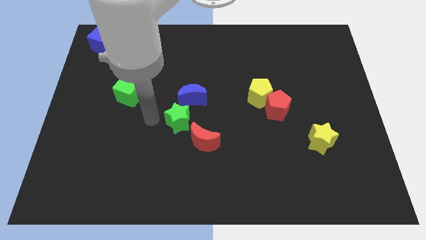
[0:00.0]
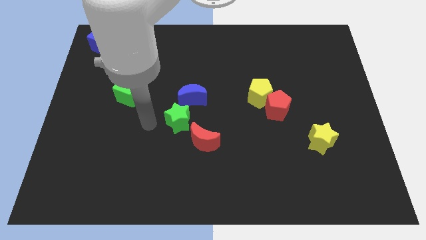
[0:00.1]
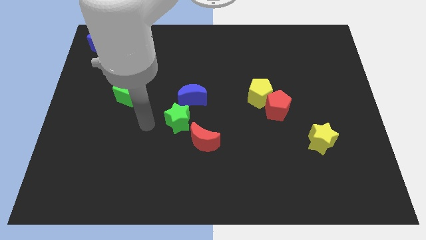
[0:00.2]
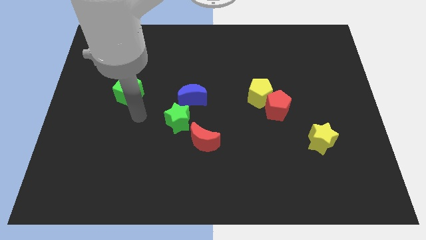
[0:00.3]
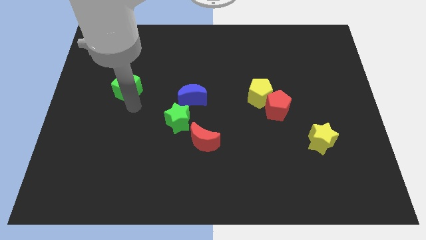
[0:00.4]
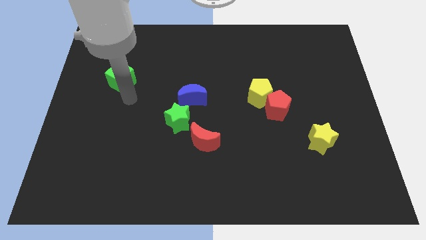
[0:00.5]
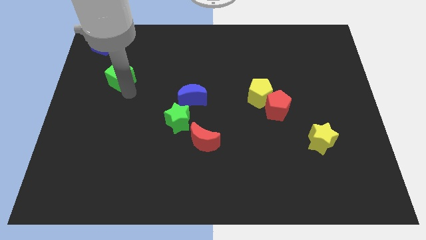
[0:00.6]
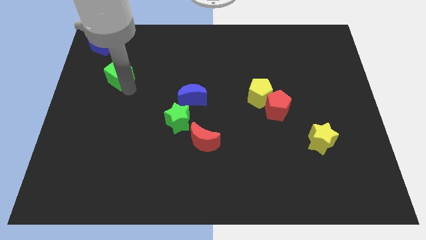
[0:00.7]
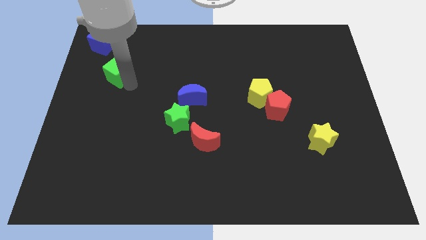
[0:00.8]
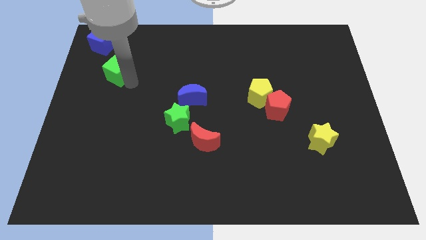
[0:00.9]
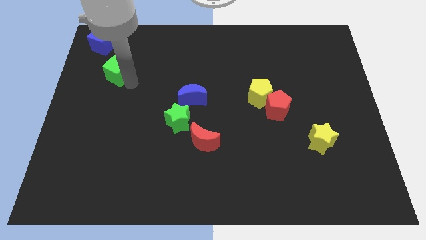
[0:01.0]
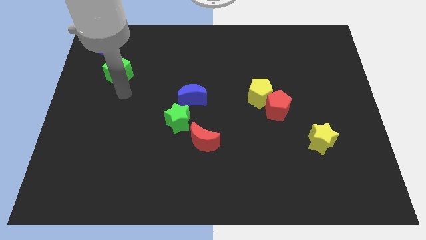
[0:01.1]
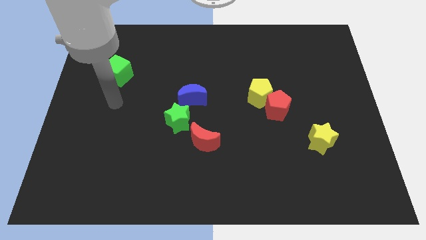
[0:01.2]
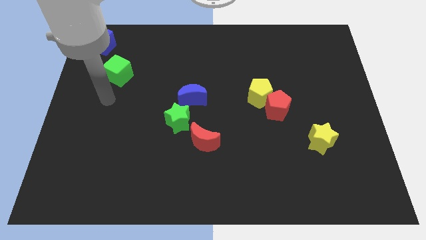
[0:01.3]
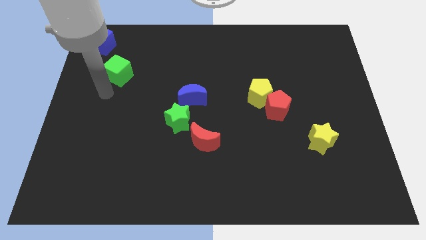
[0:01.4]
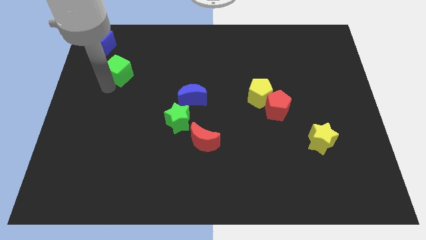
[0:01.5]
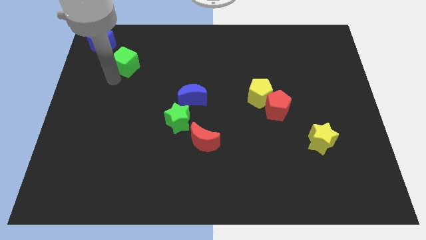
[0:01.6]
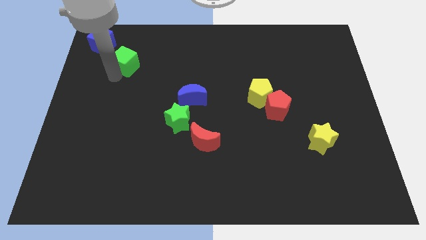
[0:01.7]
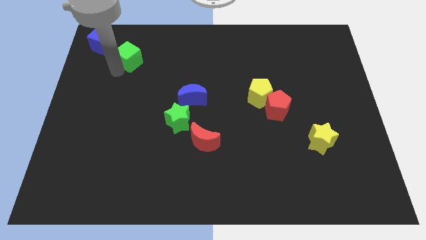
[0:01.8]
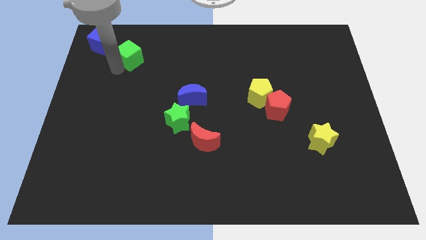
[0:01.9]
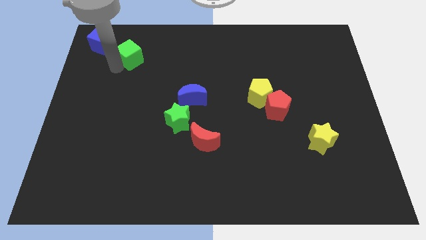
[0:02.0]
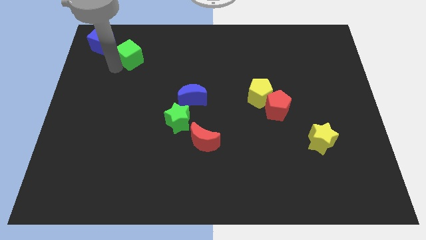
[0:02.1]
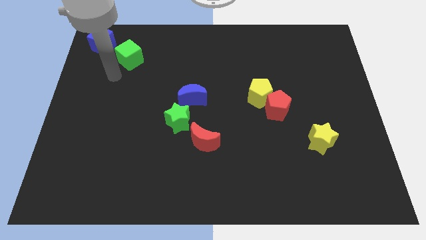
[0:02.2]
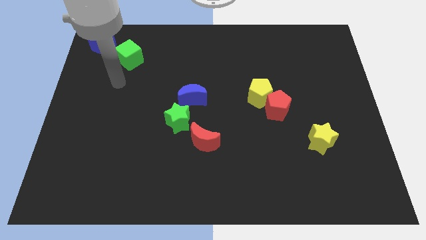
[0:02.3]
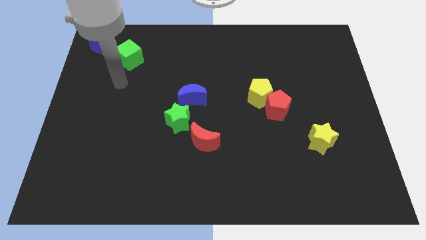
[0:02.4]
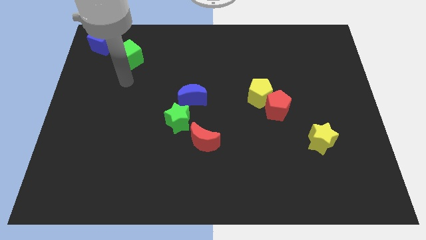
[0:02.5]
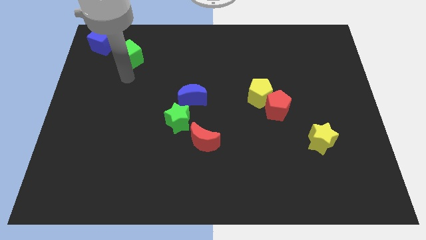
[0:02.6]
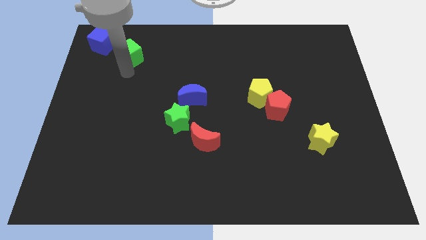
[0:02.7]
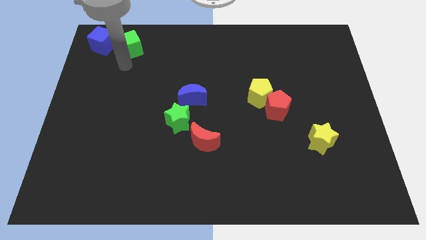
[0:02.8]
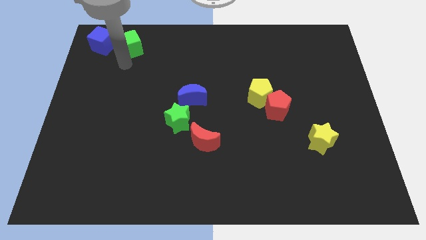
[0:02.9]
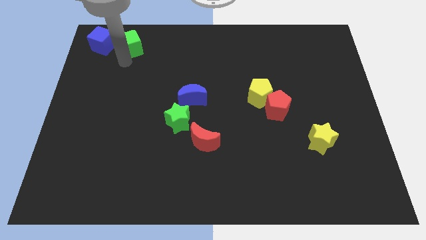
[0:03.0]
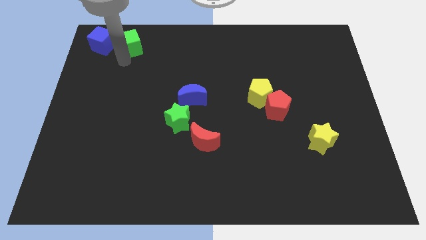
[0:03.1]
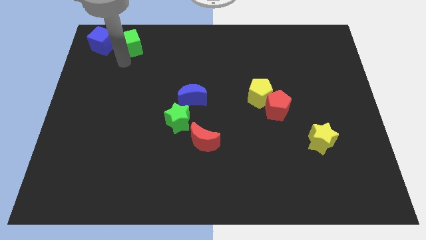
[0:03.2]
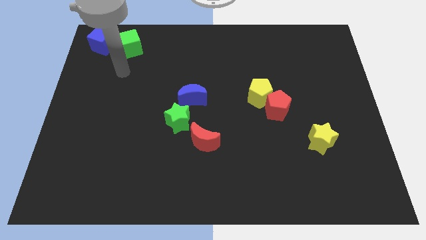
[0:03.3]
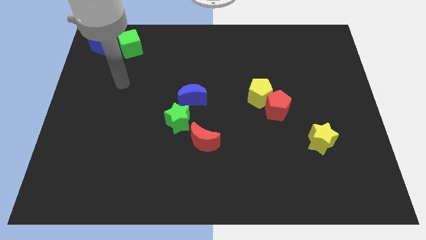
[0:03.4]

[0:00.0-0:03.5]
place green cube beside blue cube

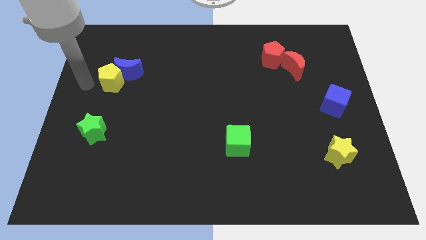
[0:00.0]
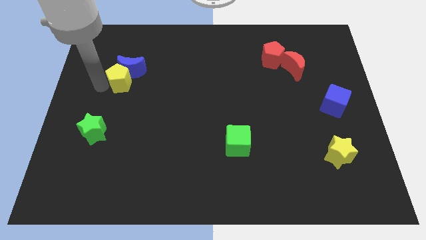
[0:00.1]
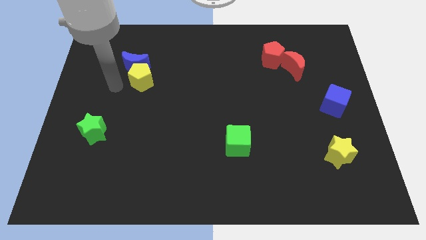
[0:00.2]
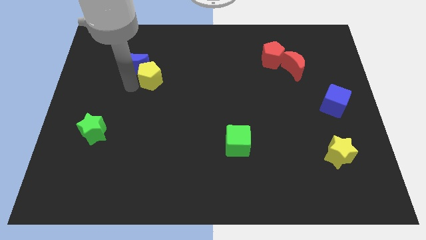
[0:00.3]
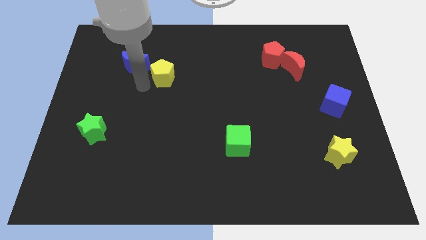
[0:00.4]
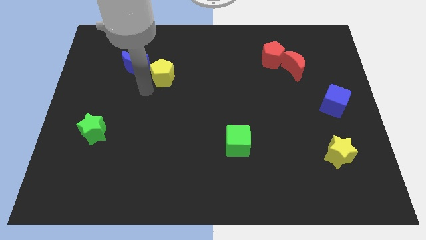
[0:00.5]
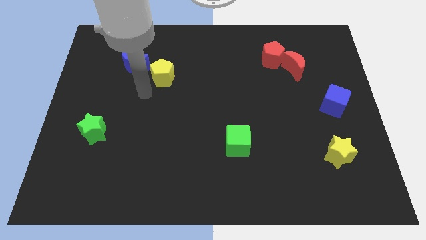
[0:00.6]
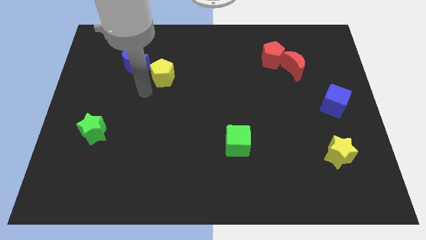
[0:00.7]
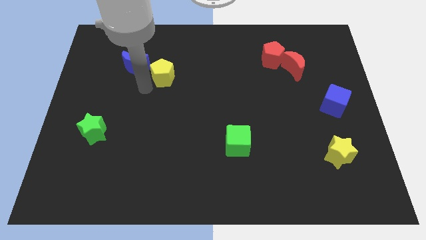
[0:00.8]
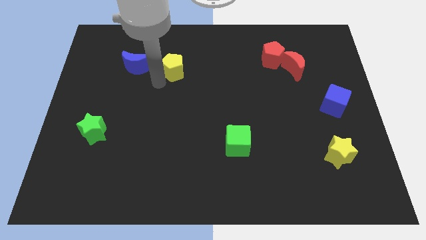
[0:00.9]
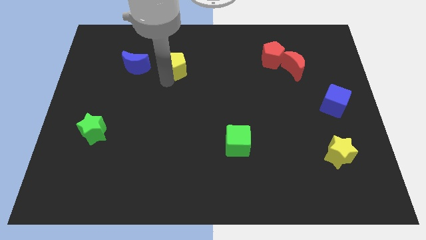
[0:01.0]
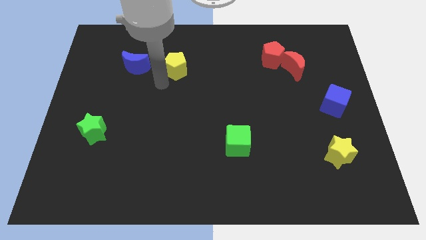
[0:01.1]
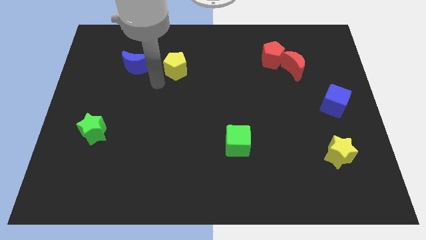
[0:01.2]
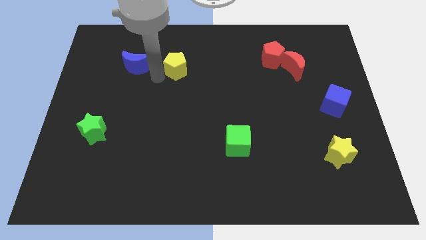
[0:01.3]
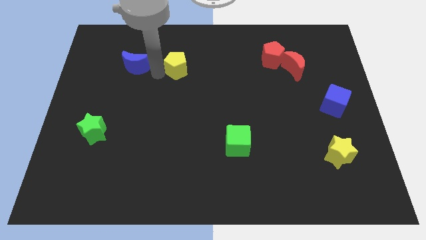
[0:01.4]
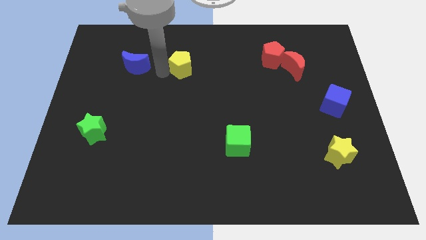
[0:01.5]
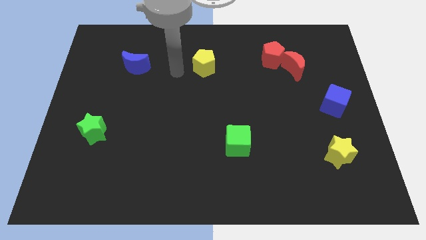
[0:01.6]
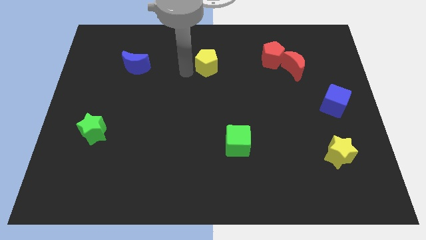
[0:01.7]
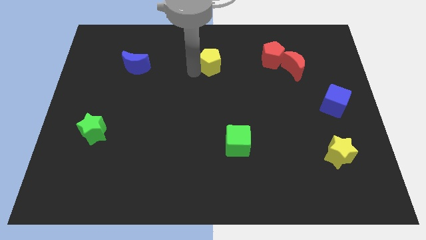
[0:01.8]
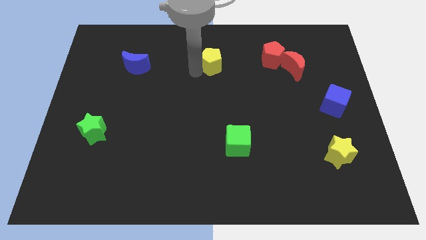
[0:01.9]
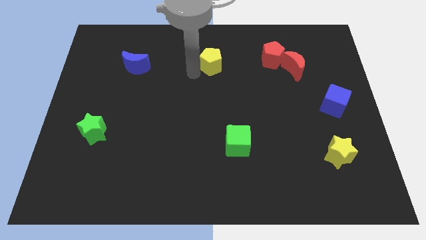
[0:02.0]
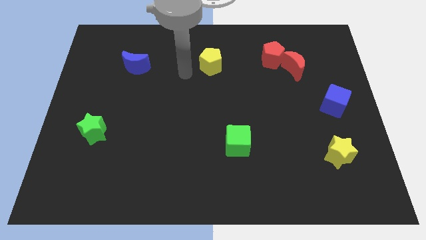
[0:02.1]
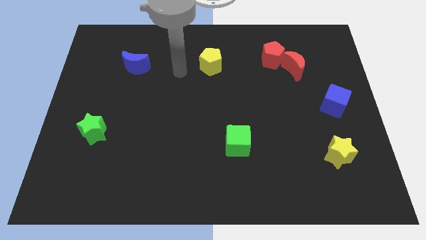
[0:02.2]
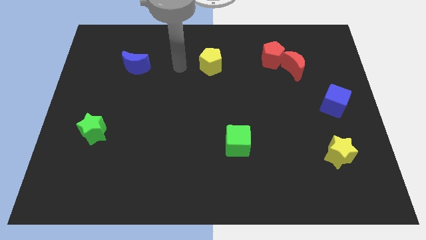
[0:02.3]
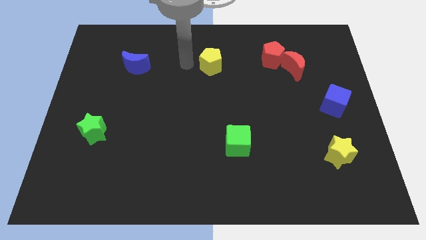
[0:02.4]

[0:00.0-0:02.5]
place the yellow pentagon parallel to the blue crescent

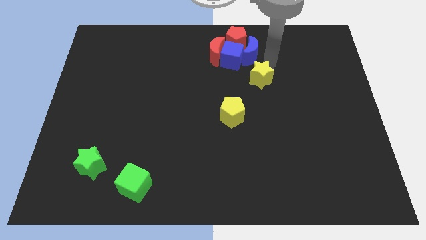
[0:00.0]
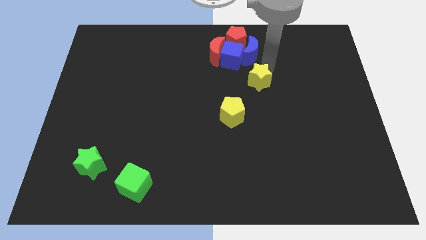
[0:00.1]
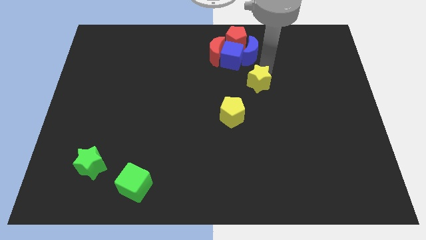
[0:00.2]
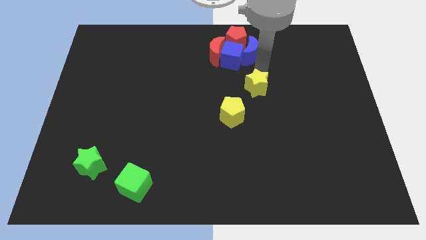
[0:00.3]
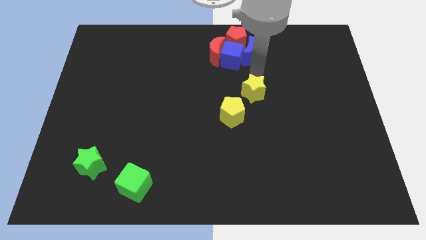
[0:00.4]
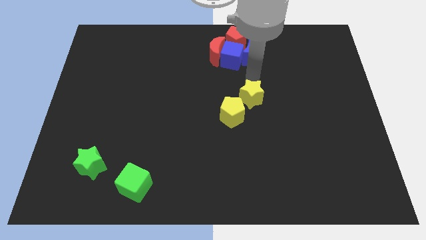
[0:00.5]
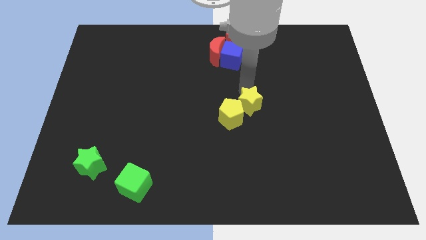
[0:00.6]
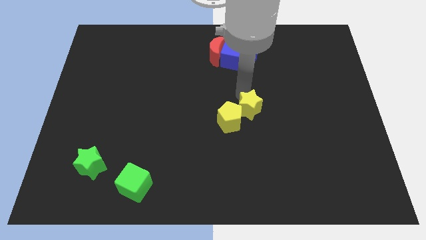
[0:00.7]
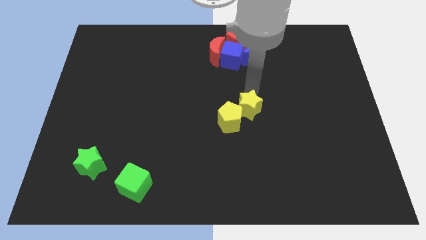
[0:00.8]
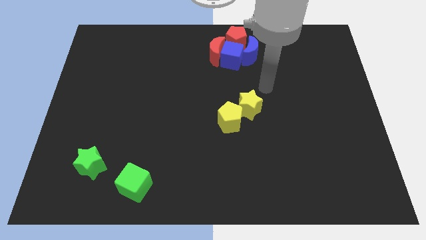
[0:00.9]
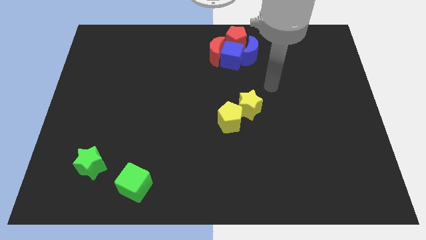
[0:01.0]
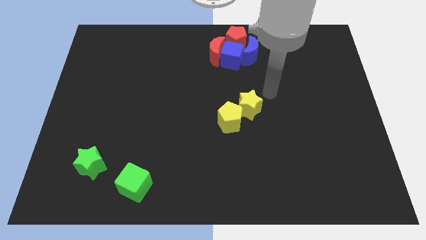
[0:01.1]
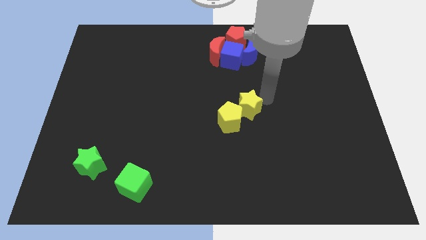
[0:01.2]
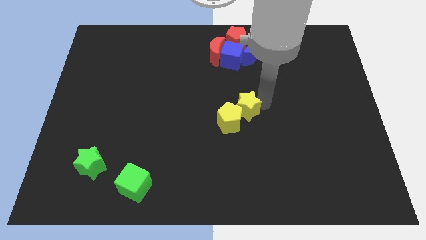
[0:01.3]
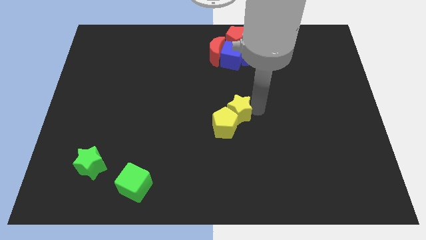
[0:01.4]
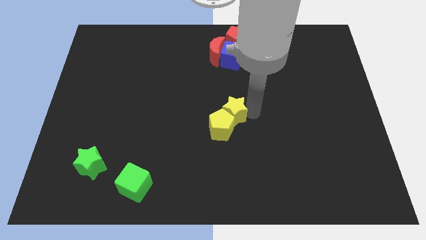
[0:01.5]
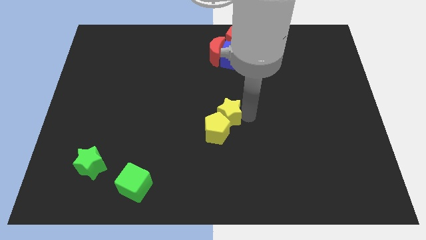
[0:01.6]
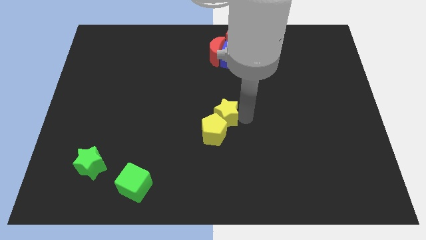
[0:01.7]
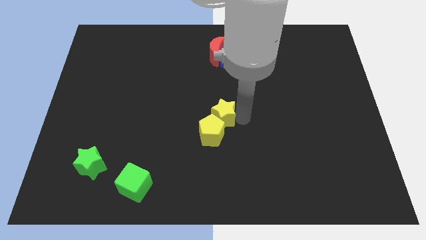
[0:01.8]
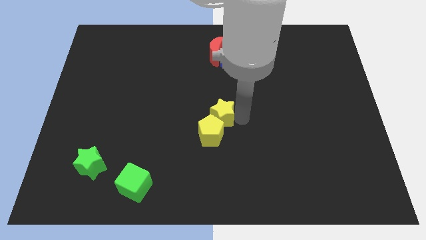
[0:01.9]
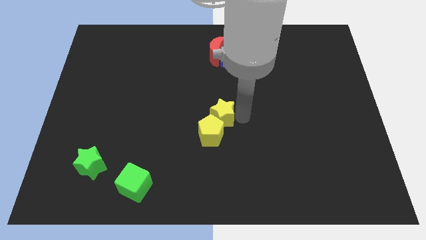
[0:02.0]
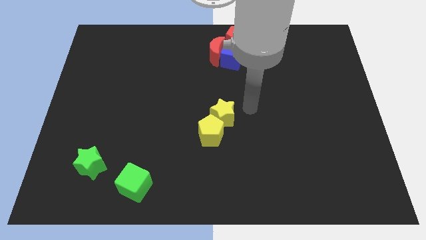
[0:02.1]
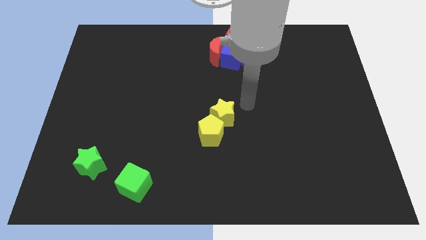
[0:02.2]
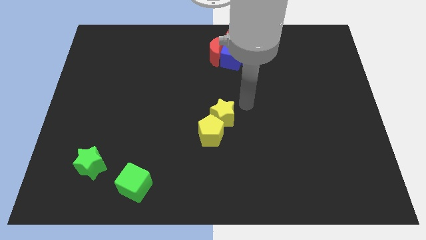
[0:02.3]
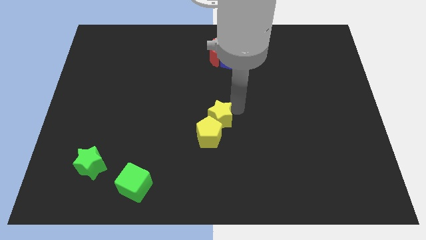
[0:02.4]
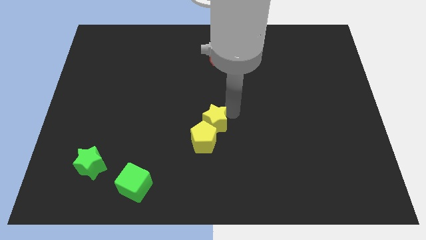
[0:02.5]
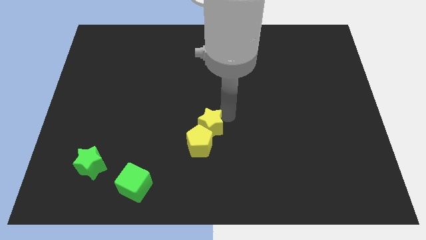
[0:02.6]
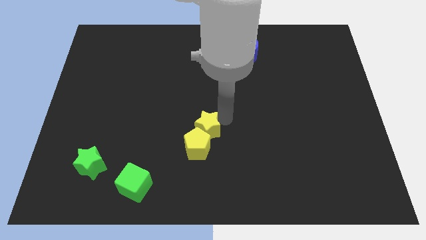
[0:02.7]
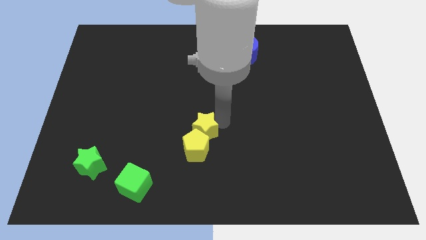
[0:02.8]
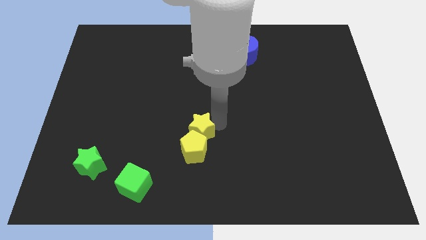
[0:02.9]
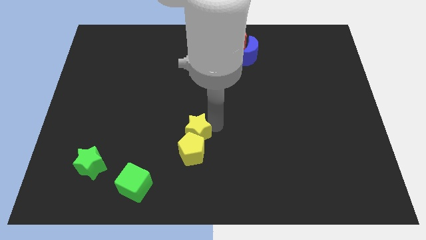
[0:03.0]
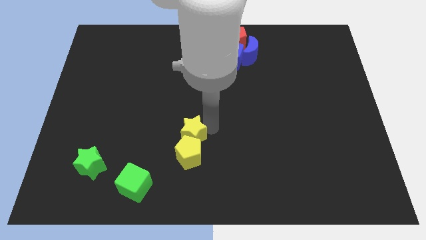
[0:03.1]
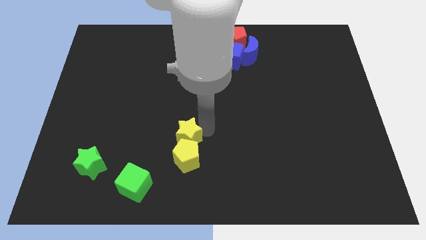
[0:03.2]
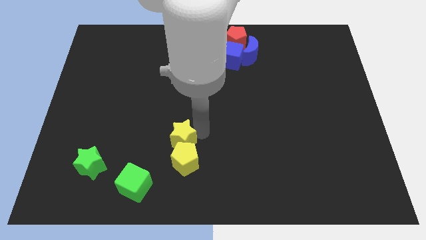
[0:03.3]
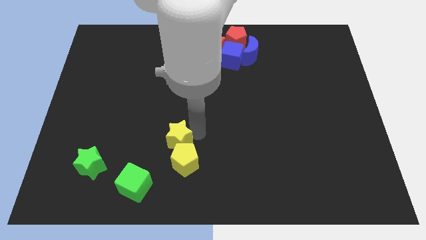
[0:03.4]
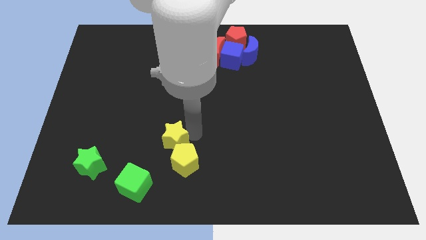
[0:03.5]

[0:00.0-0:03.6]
push yellow star in to yellow pentagon
